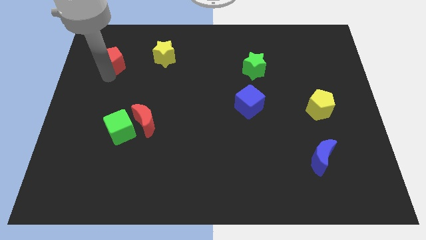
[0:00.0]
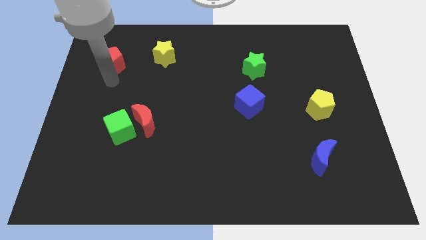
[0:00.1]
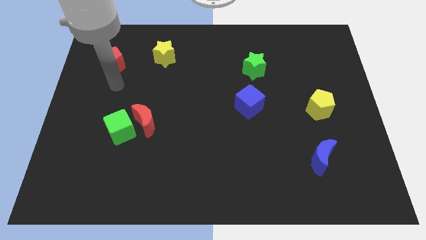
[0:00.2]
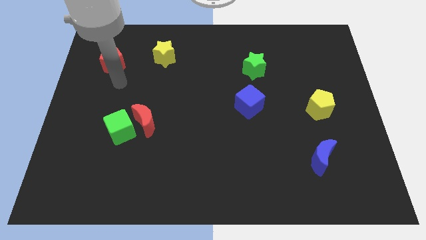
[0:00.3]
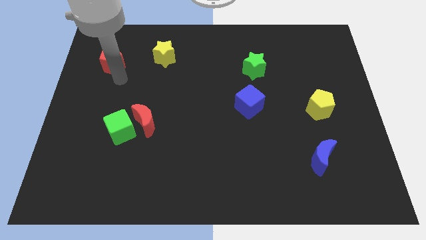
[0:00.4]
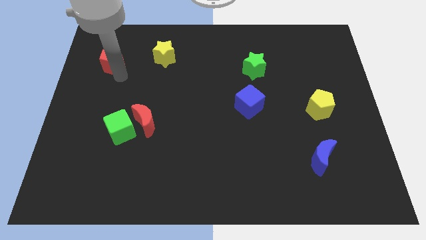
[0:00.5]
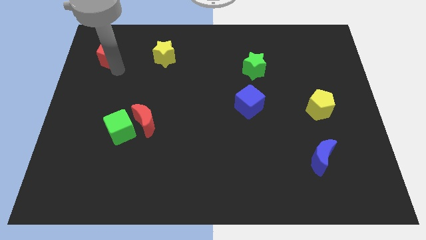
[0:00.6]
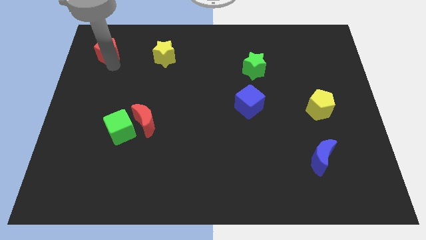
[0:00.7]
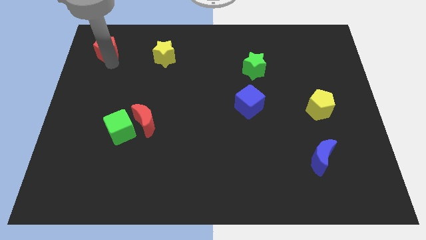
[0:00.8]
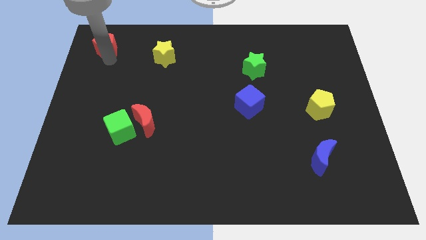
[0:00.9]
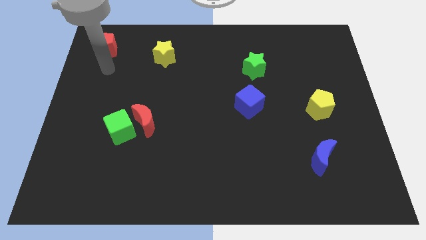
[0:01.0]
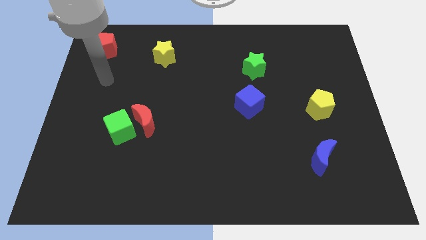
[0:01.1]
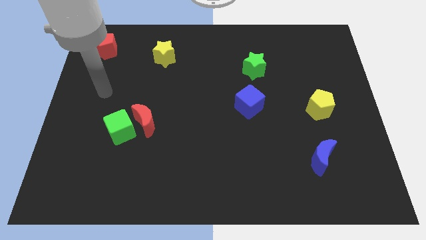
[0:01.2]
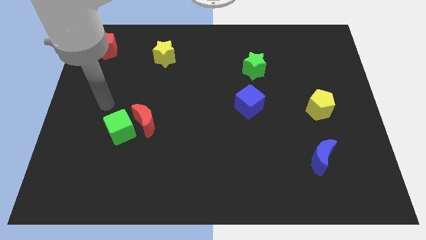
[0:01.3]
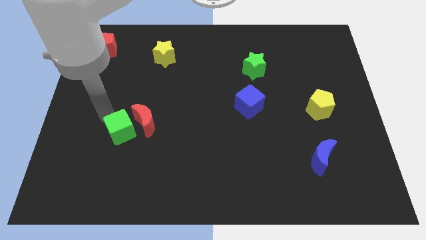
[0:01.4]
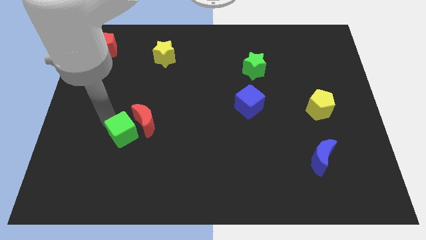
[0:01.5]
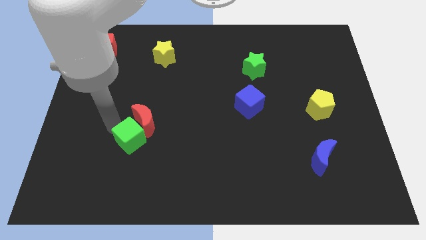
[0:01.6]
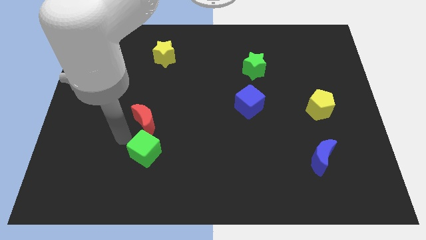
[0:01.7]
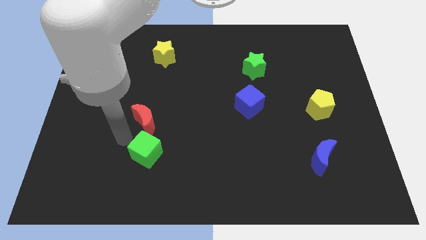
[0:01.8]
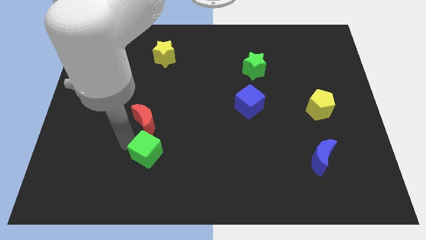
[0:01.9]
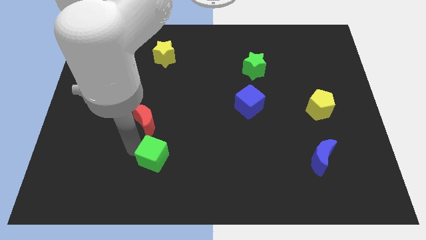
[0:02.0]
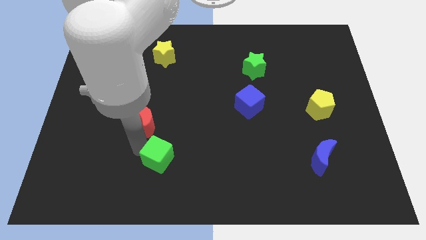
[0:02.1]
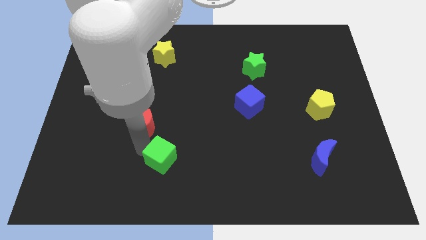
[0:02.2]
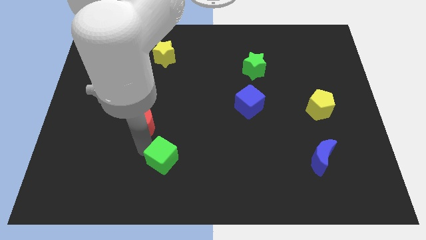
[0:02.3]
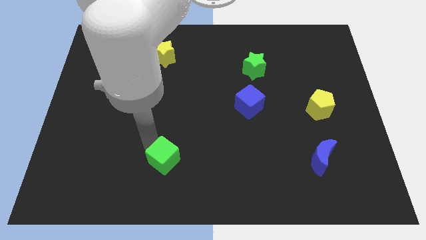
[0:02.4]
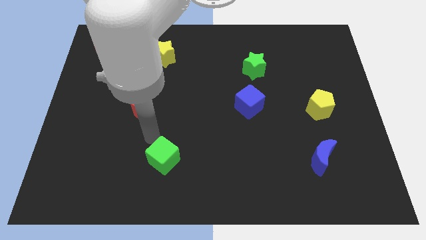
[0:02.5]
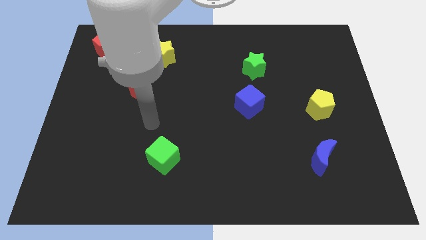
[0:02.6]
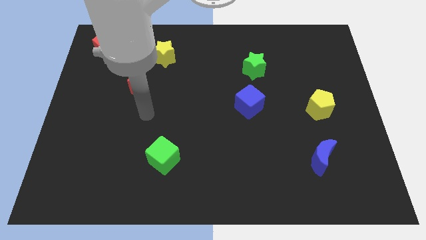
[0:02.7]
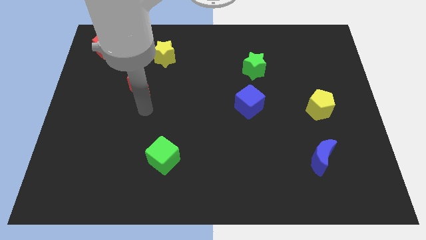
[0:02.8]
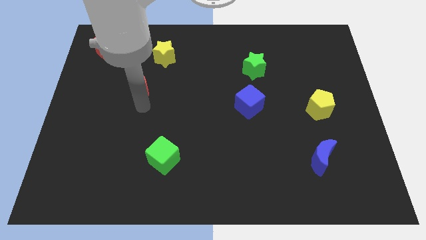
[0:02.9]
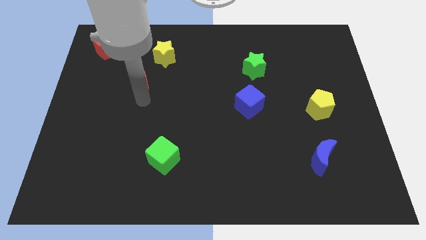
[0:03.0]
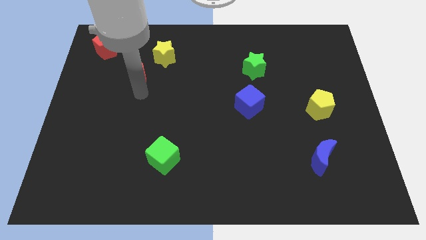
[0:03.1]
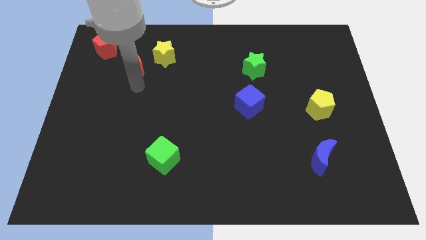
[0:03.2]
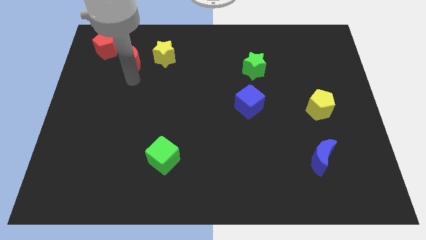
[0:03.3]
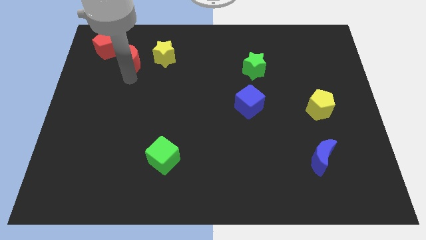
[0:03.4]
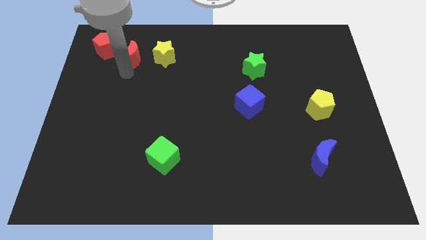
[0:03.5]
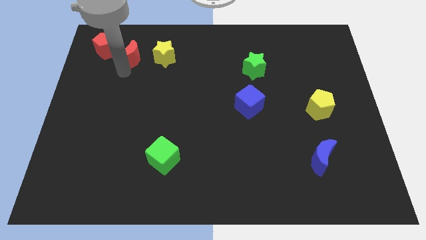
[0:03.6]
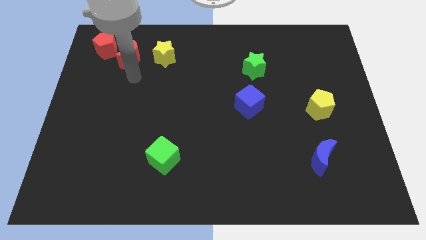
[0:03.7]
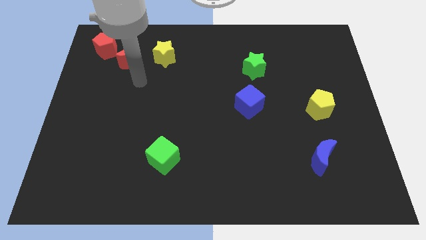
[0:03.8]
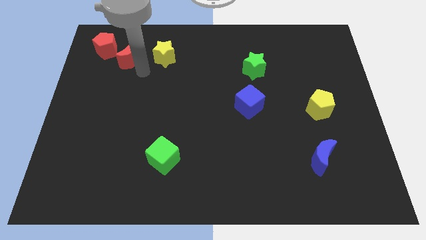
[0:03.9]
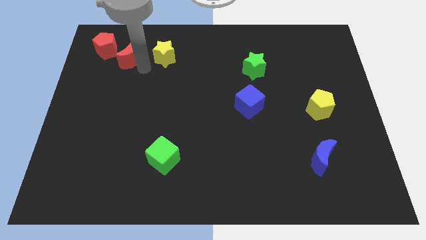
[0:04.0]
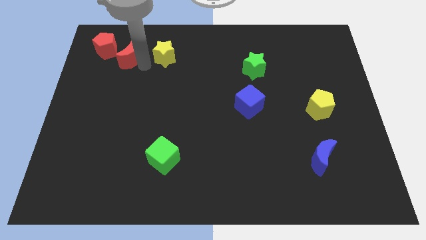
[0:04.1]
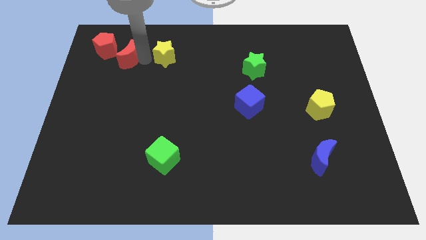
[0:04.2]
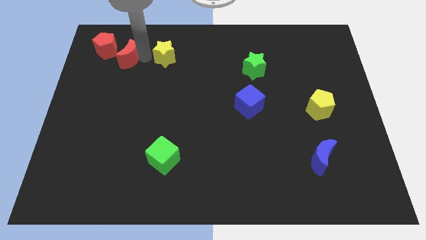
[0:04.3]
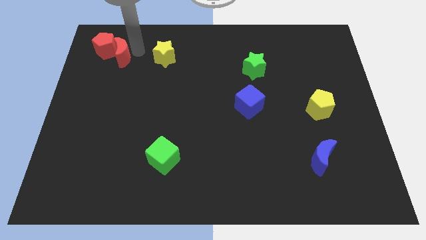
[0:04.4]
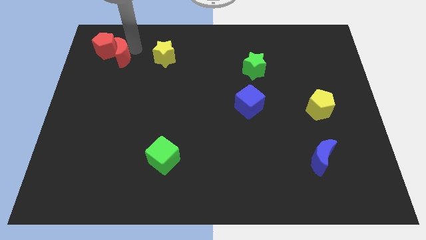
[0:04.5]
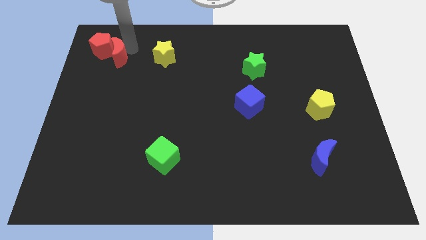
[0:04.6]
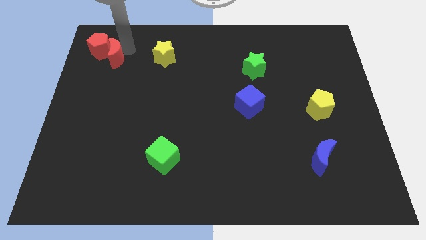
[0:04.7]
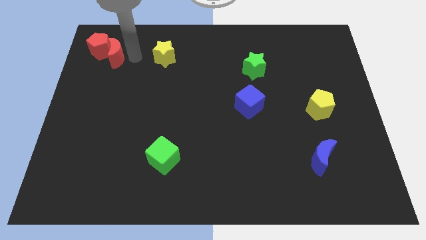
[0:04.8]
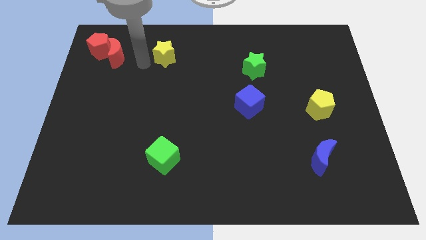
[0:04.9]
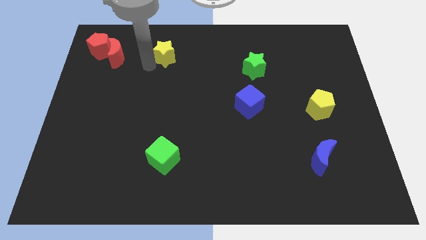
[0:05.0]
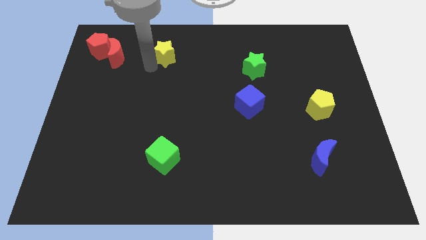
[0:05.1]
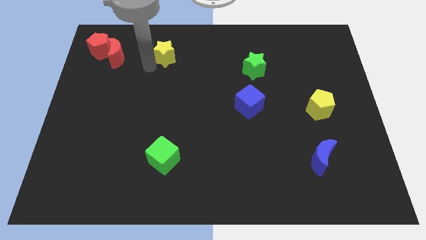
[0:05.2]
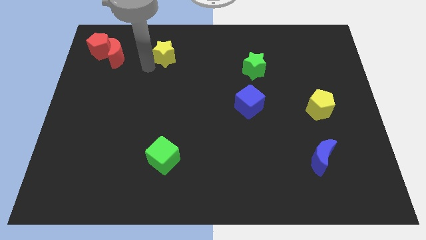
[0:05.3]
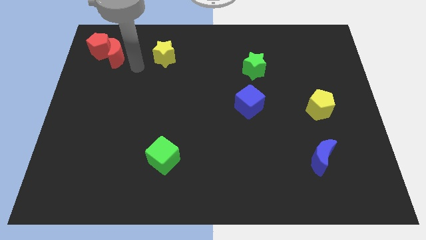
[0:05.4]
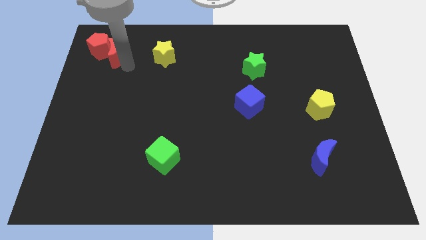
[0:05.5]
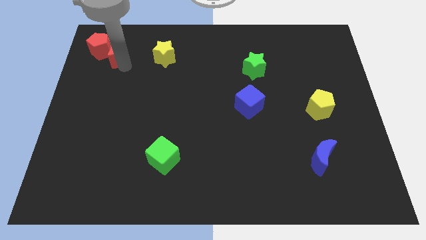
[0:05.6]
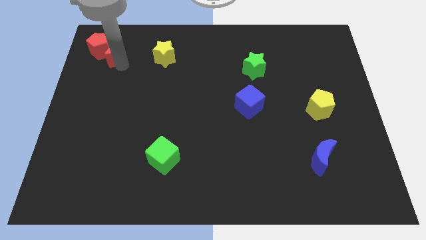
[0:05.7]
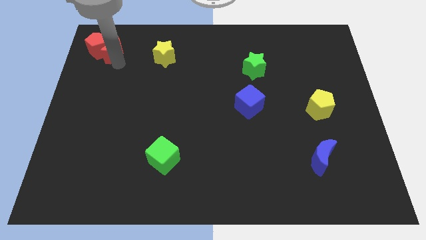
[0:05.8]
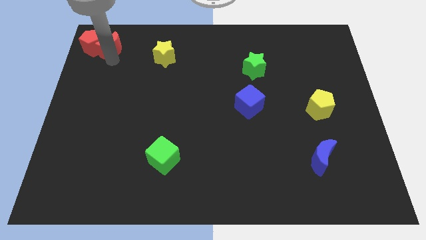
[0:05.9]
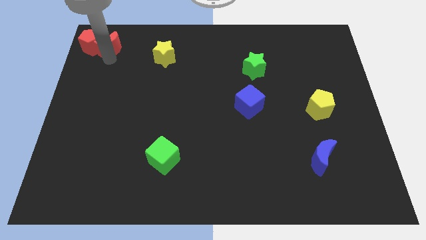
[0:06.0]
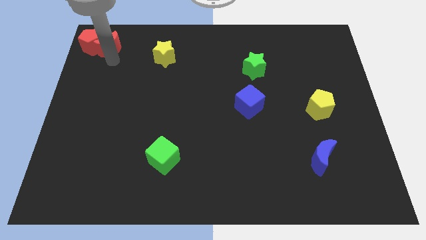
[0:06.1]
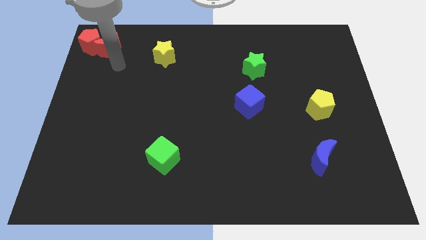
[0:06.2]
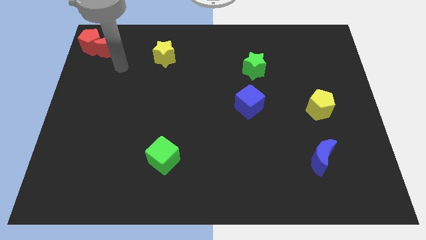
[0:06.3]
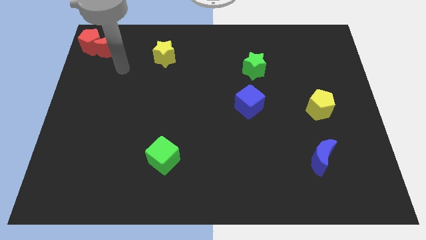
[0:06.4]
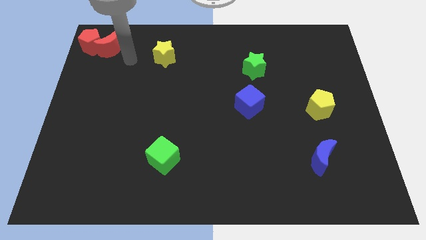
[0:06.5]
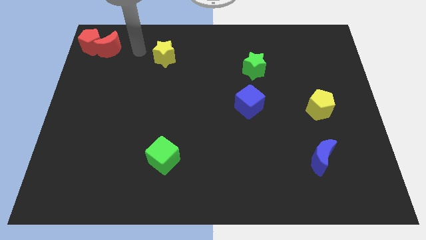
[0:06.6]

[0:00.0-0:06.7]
push red pentagon along with red crescent to the left top of the board

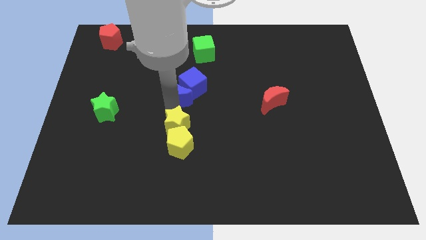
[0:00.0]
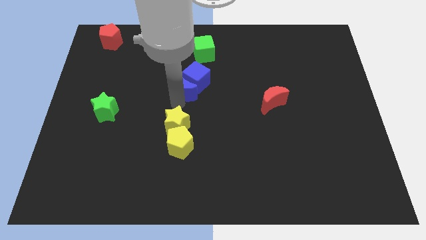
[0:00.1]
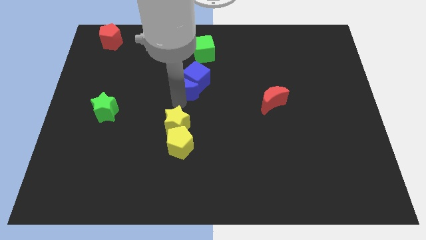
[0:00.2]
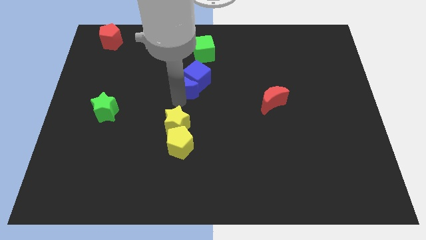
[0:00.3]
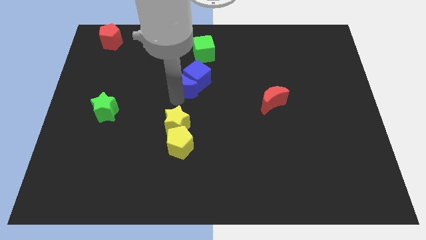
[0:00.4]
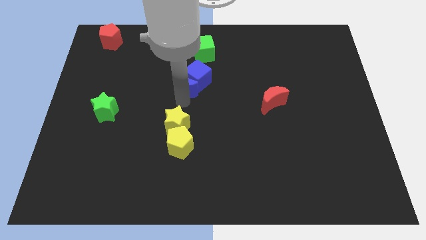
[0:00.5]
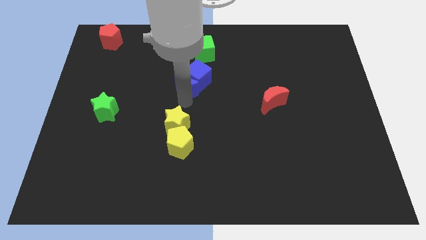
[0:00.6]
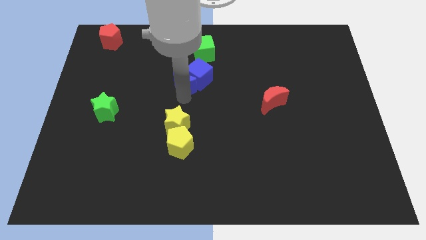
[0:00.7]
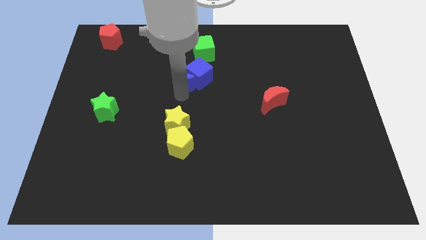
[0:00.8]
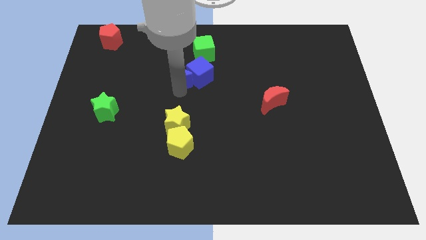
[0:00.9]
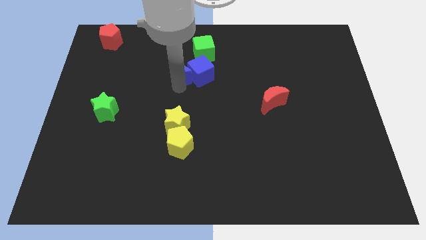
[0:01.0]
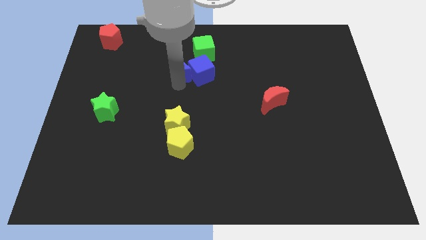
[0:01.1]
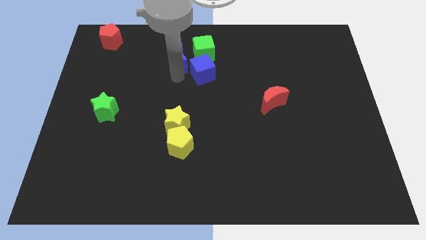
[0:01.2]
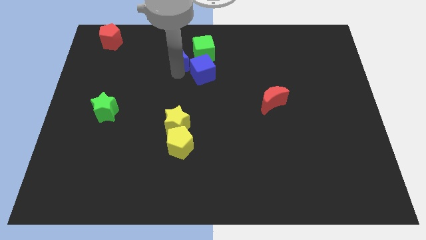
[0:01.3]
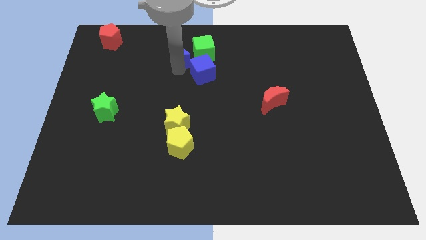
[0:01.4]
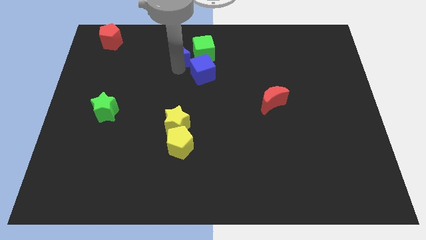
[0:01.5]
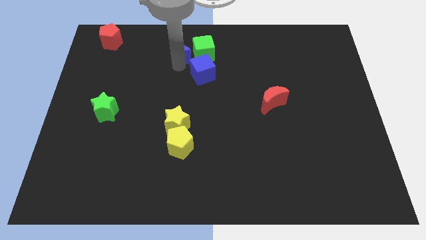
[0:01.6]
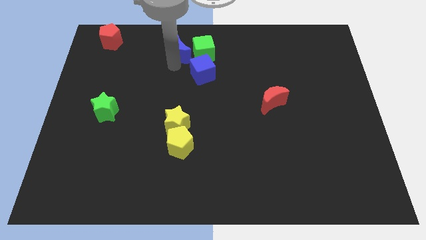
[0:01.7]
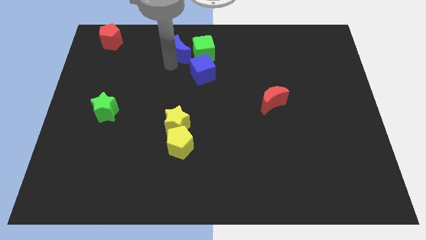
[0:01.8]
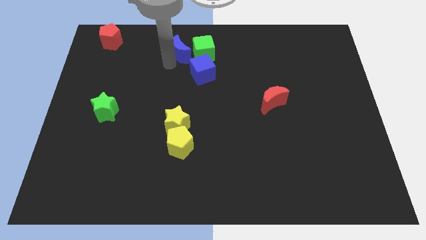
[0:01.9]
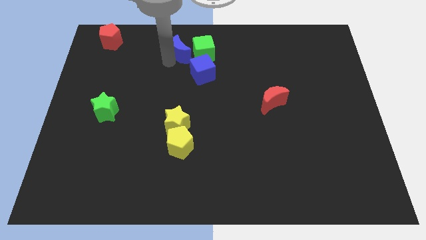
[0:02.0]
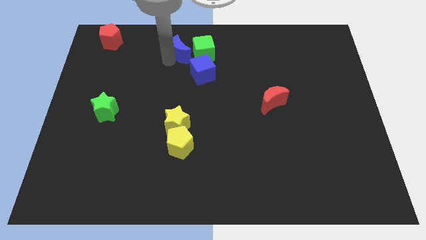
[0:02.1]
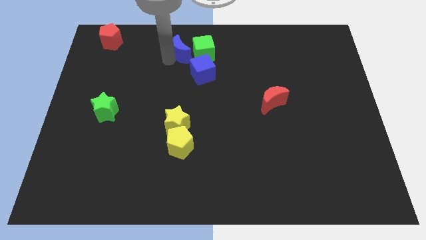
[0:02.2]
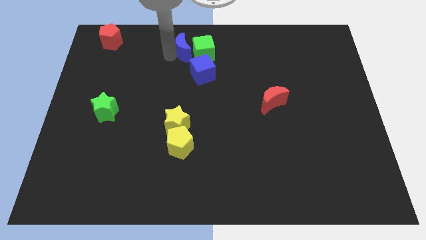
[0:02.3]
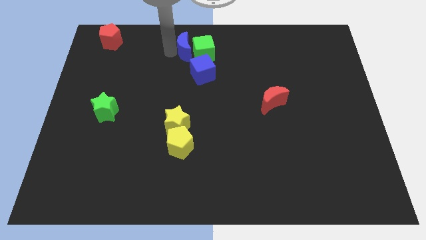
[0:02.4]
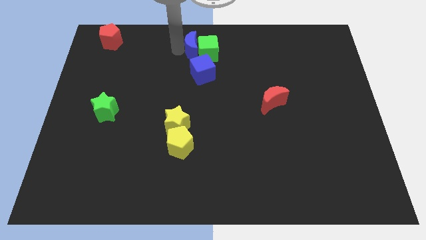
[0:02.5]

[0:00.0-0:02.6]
separate the blue crescent from blue cube
